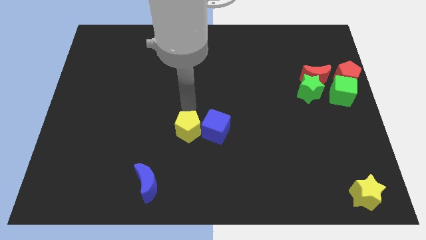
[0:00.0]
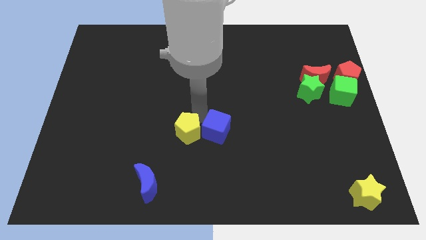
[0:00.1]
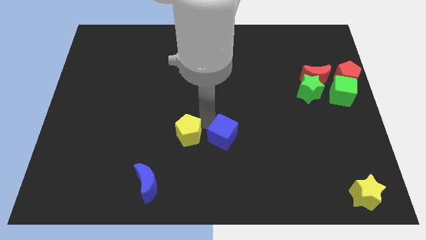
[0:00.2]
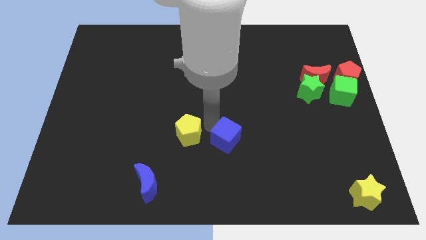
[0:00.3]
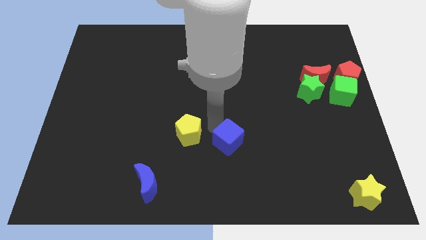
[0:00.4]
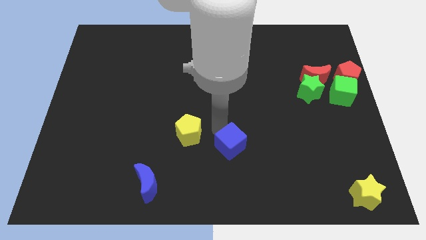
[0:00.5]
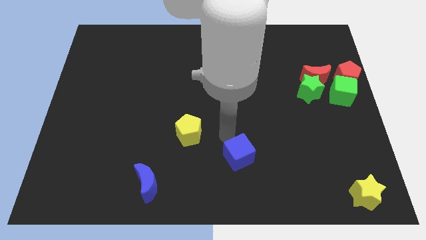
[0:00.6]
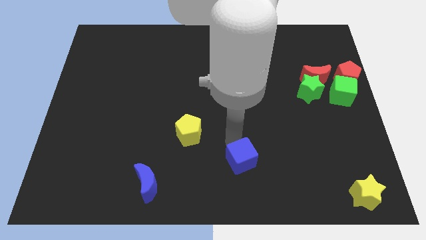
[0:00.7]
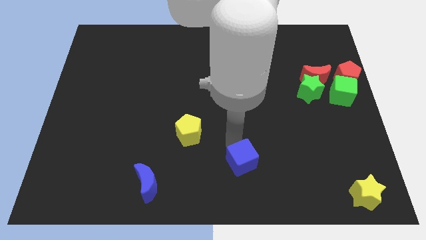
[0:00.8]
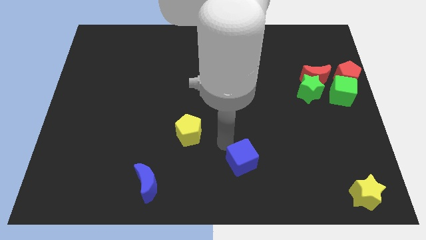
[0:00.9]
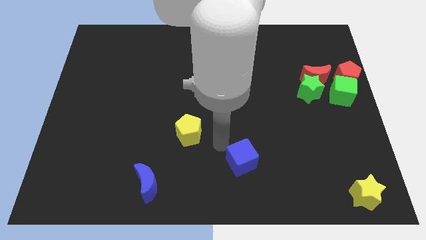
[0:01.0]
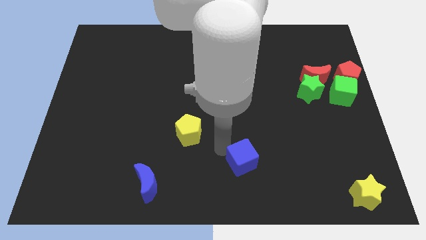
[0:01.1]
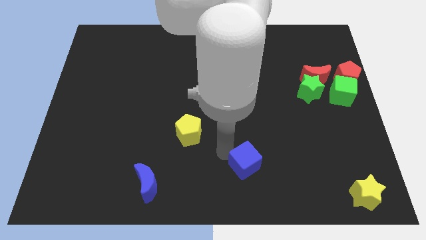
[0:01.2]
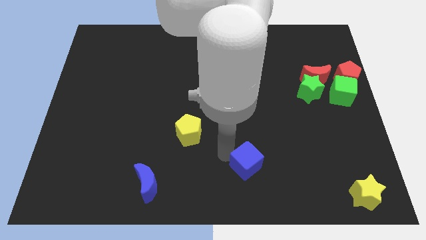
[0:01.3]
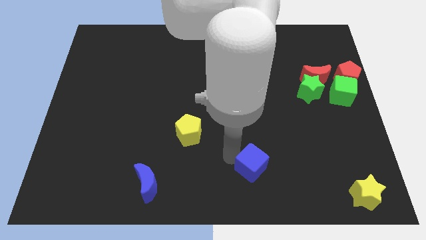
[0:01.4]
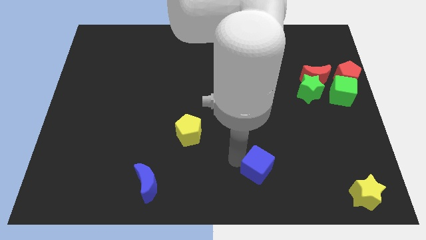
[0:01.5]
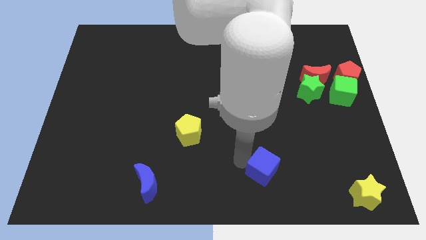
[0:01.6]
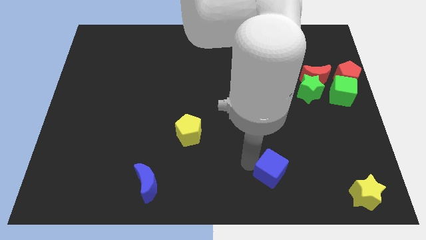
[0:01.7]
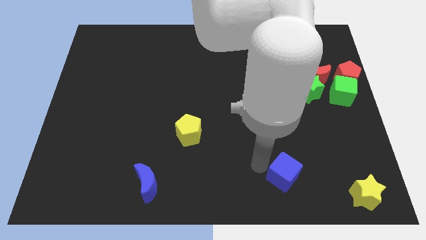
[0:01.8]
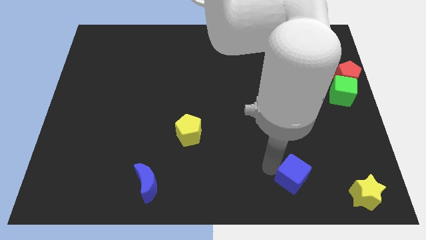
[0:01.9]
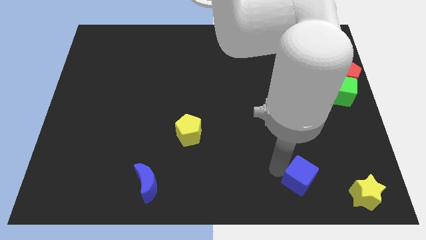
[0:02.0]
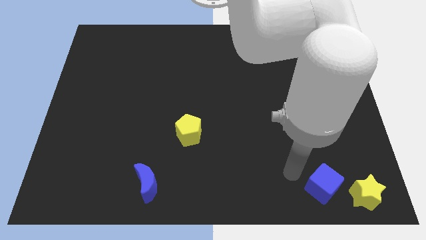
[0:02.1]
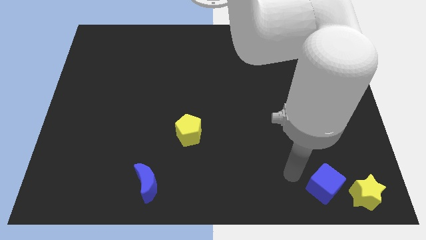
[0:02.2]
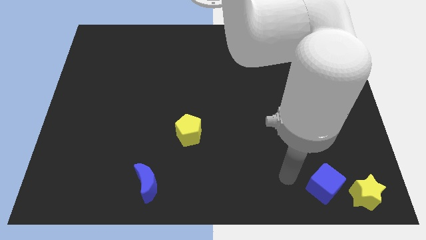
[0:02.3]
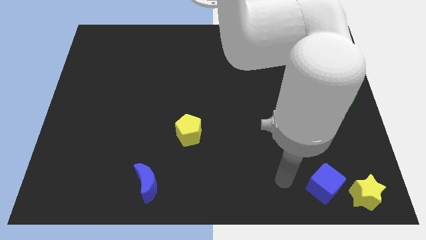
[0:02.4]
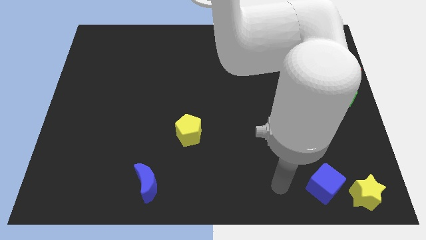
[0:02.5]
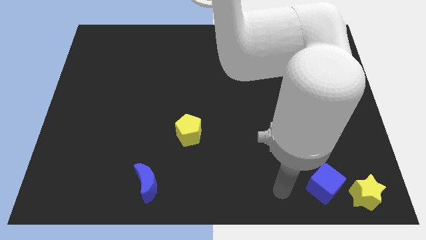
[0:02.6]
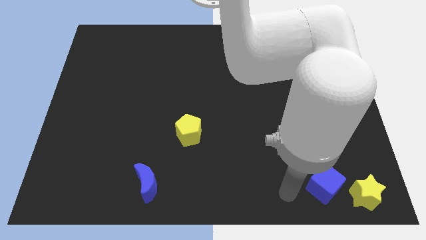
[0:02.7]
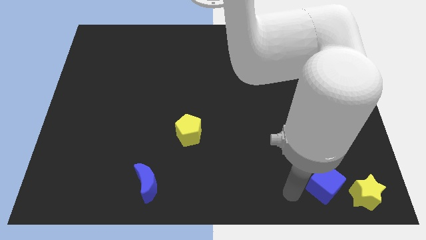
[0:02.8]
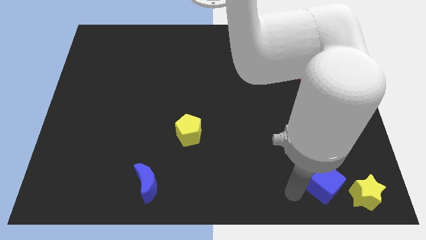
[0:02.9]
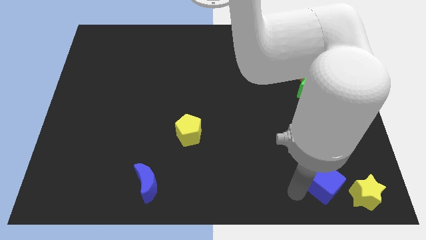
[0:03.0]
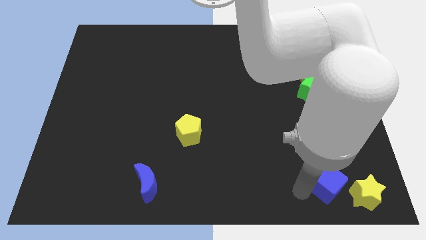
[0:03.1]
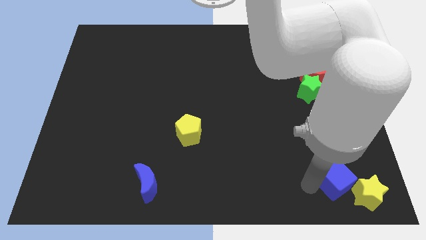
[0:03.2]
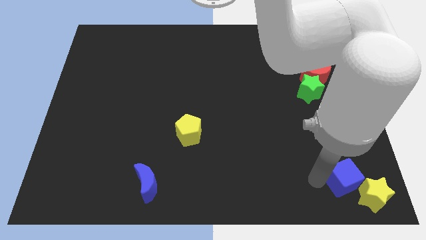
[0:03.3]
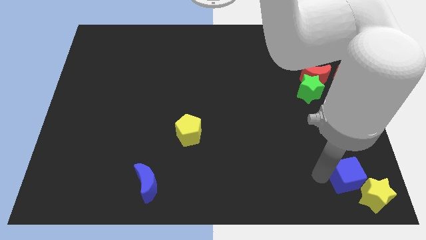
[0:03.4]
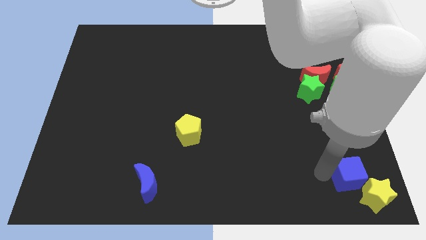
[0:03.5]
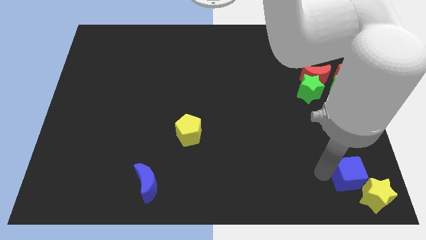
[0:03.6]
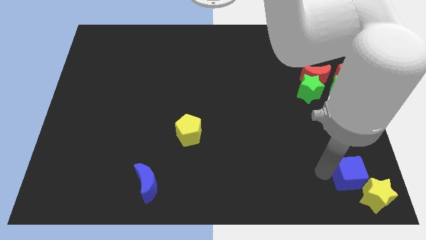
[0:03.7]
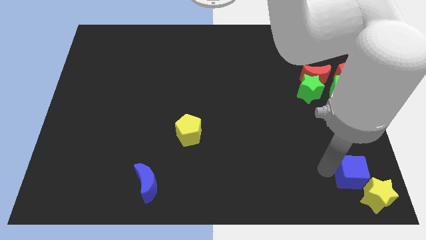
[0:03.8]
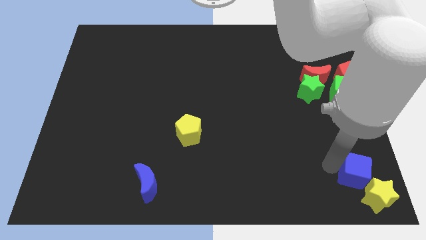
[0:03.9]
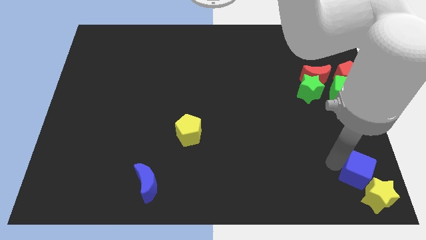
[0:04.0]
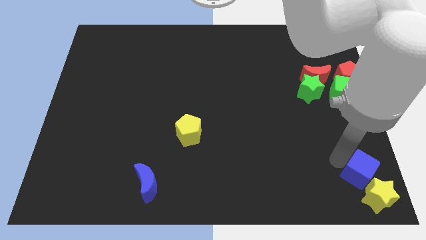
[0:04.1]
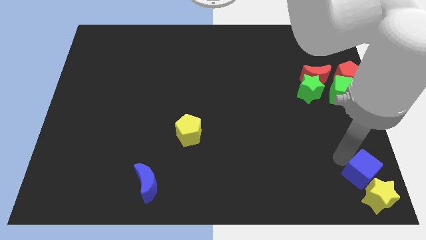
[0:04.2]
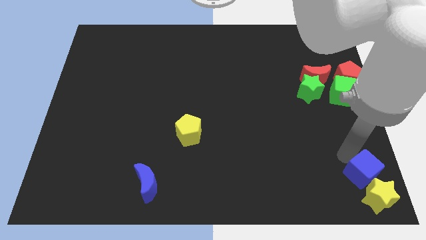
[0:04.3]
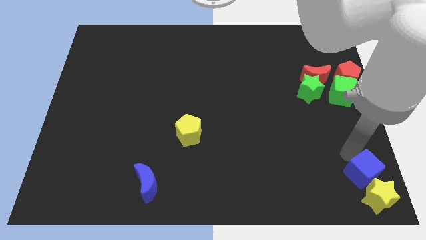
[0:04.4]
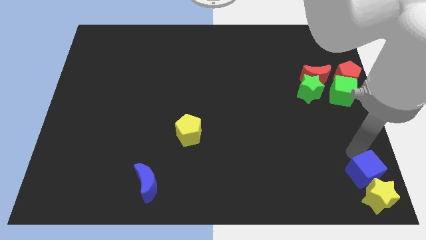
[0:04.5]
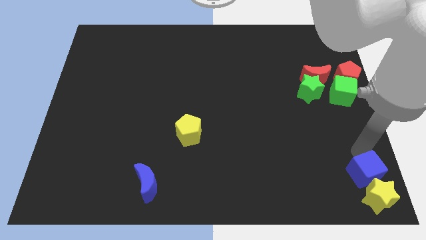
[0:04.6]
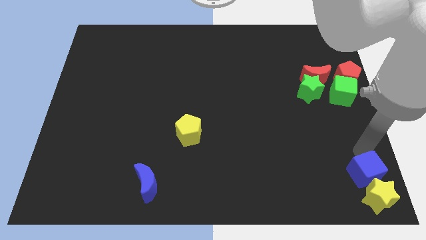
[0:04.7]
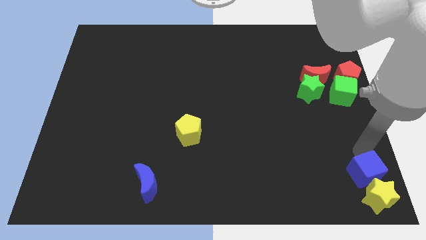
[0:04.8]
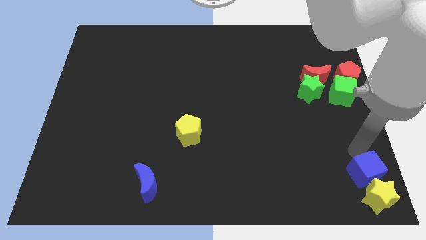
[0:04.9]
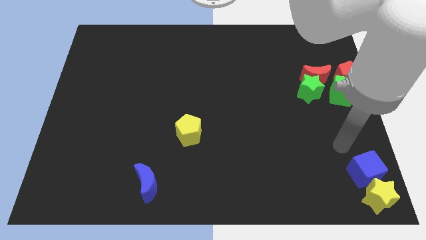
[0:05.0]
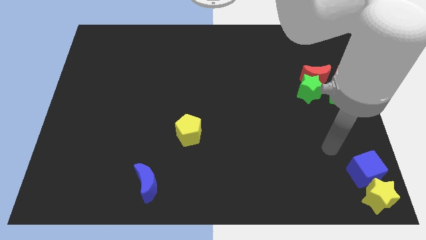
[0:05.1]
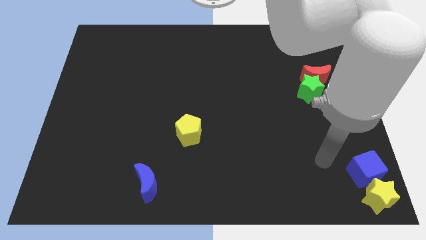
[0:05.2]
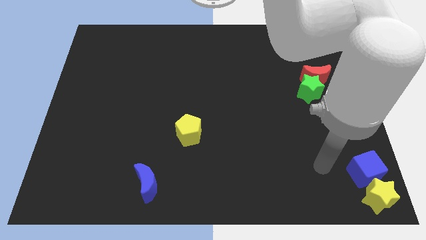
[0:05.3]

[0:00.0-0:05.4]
place the blue cube above the yellow star

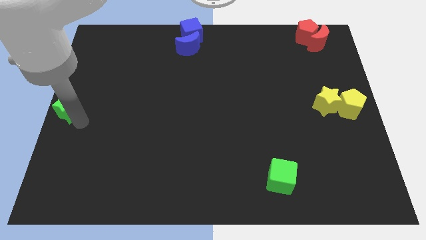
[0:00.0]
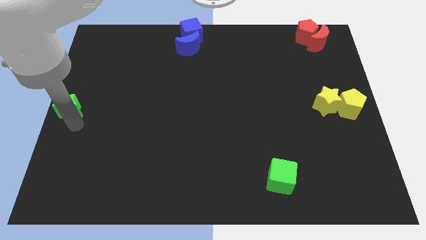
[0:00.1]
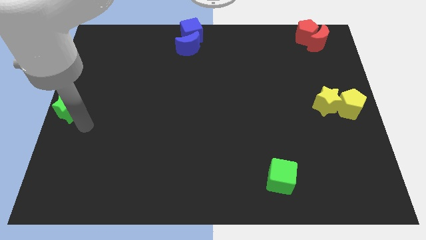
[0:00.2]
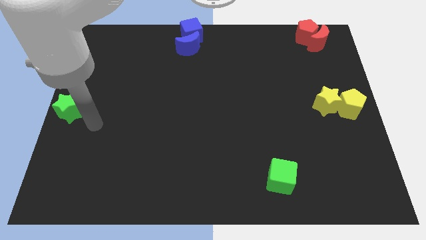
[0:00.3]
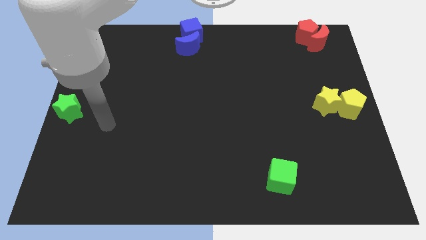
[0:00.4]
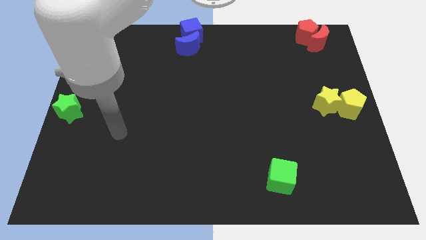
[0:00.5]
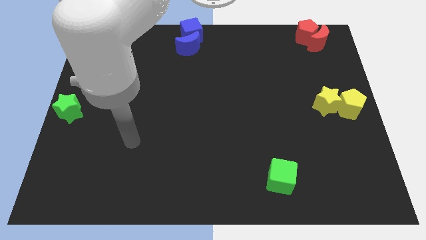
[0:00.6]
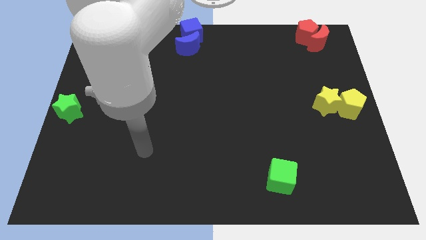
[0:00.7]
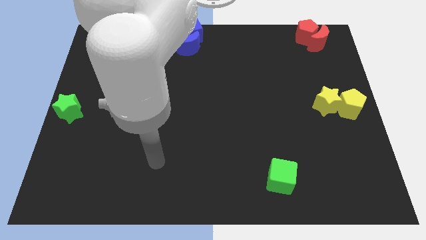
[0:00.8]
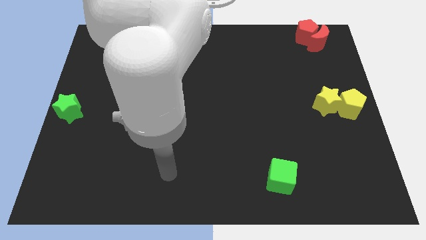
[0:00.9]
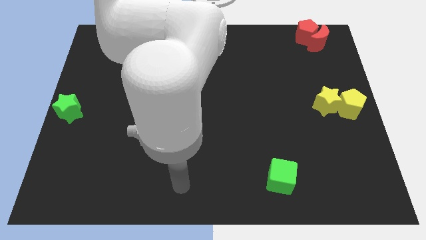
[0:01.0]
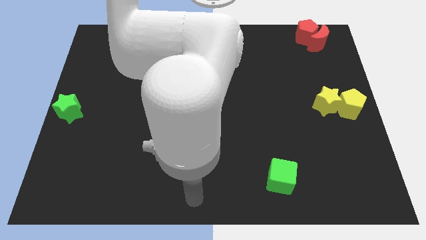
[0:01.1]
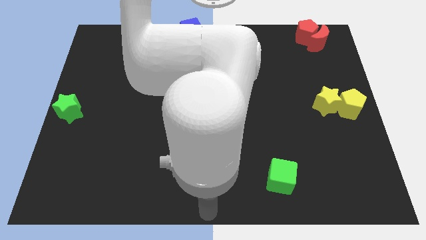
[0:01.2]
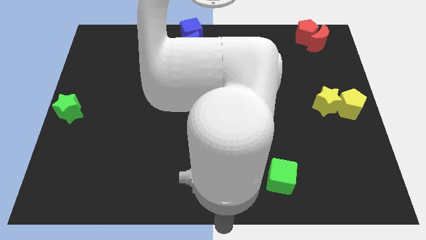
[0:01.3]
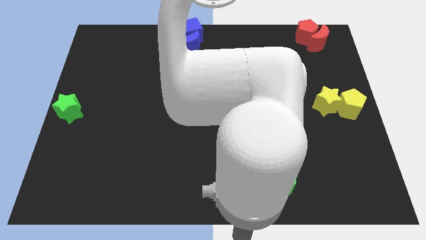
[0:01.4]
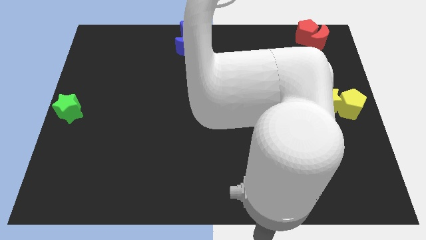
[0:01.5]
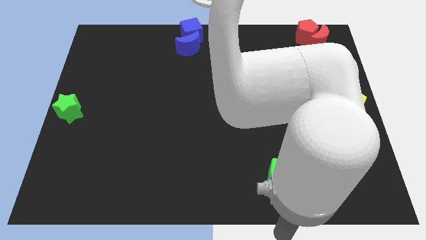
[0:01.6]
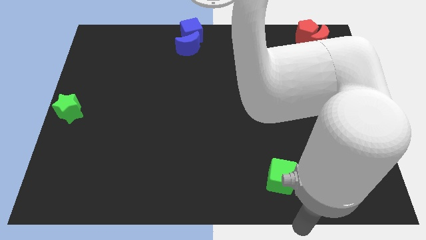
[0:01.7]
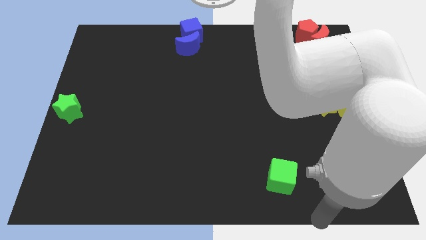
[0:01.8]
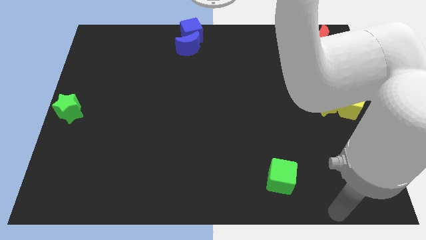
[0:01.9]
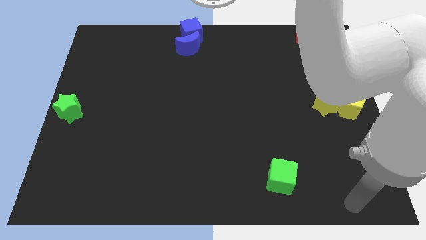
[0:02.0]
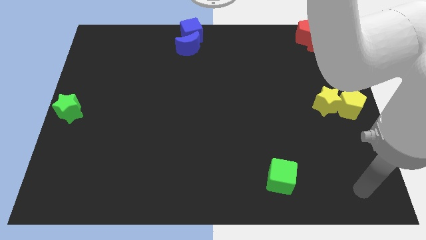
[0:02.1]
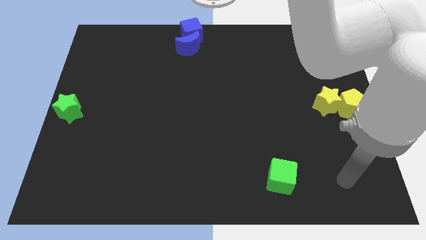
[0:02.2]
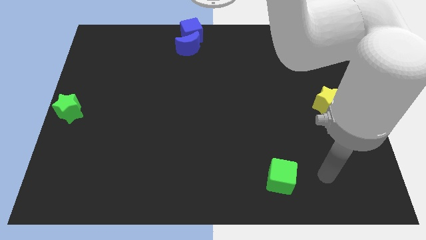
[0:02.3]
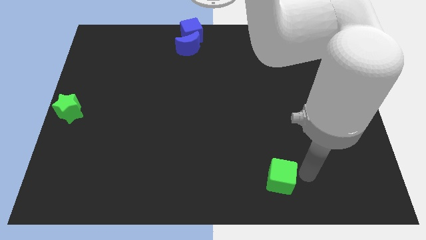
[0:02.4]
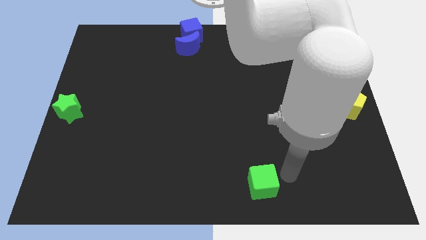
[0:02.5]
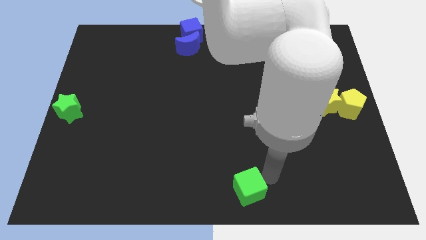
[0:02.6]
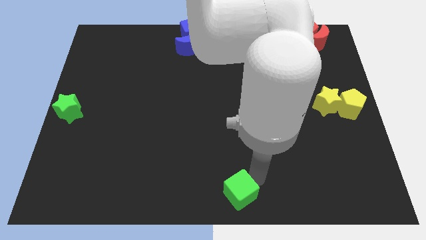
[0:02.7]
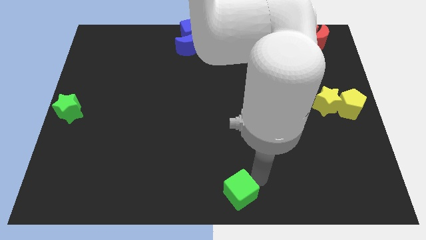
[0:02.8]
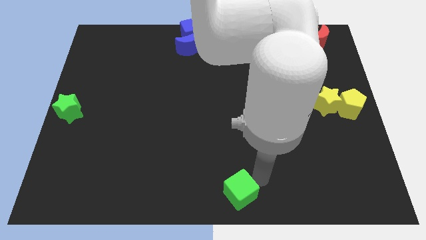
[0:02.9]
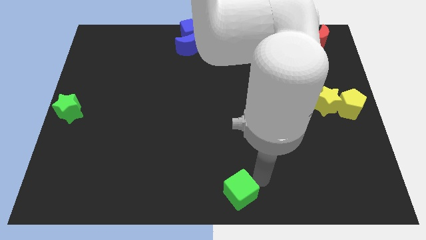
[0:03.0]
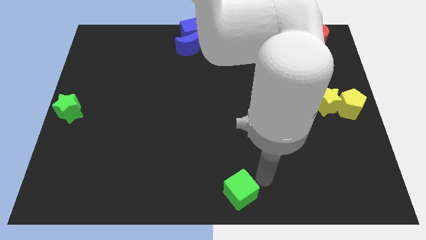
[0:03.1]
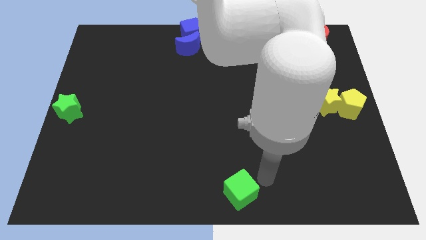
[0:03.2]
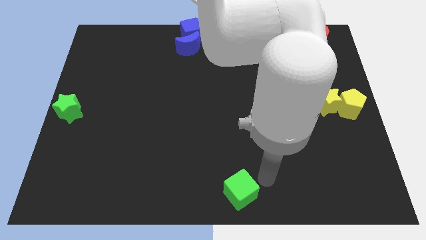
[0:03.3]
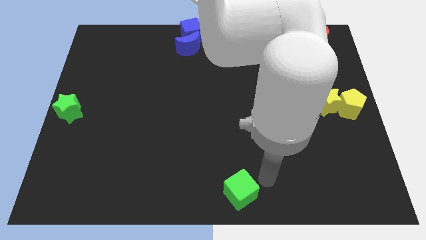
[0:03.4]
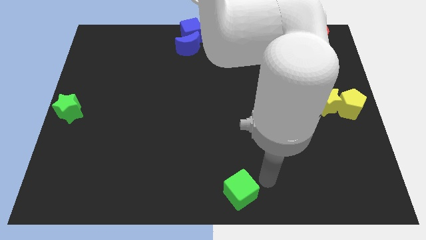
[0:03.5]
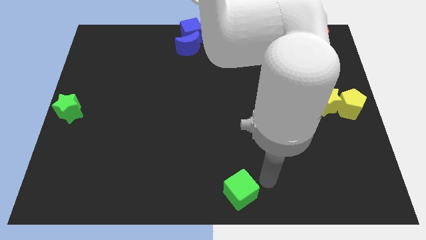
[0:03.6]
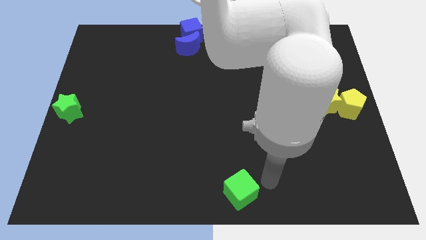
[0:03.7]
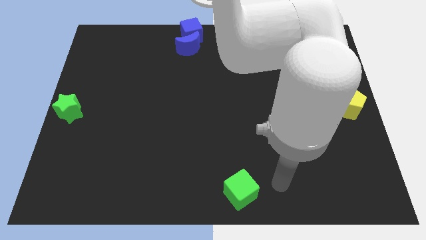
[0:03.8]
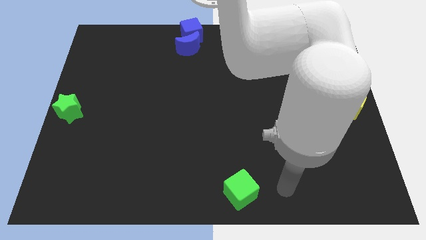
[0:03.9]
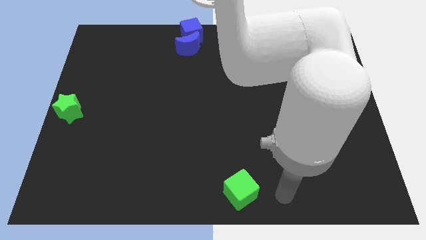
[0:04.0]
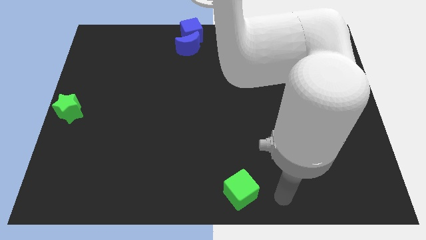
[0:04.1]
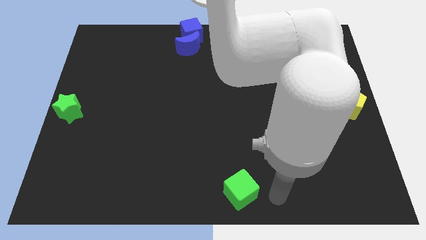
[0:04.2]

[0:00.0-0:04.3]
move the green cube to the bottom center of the board
